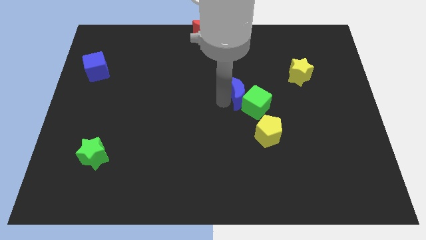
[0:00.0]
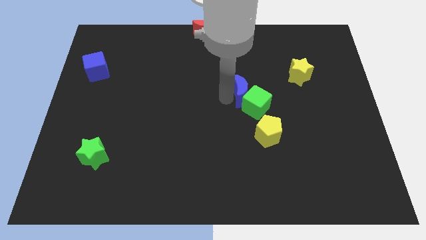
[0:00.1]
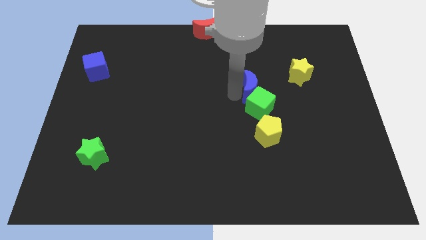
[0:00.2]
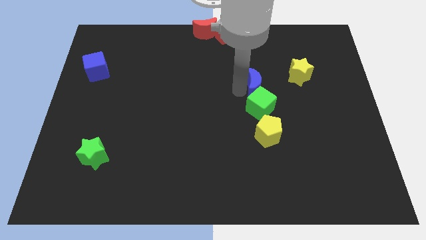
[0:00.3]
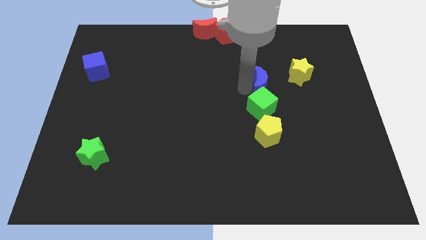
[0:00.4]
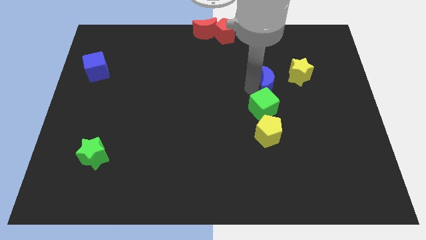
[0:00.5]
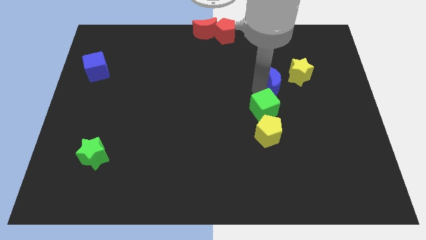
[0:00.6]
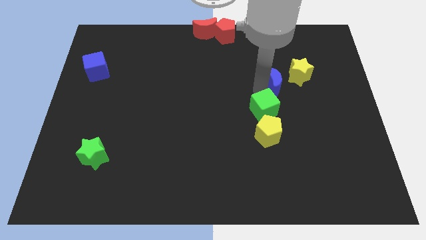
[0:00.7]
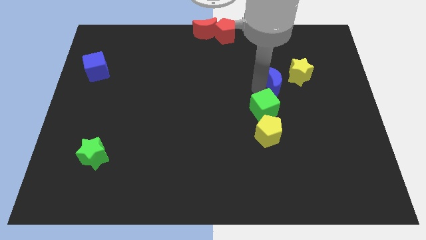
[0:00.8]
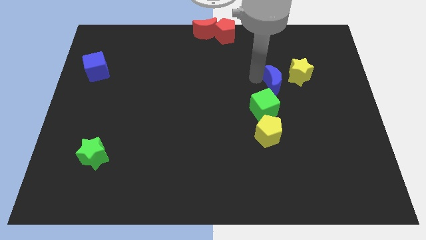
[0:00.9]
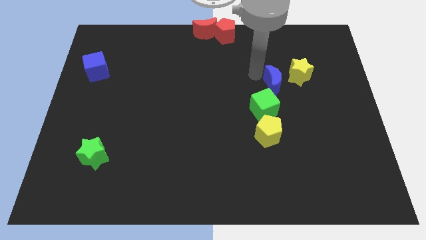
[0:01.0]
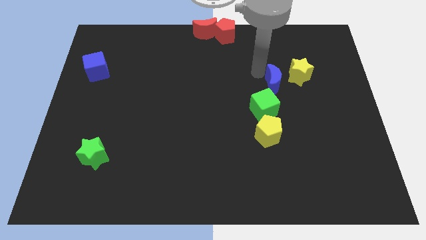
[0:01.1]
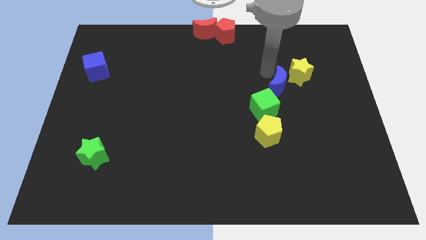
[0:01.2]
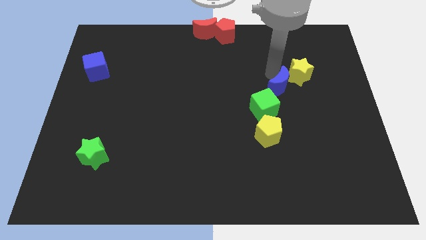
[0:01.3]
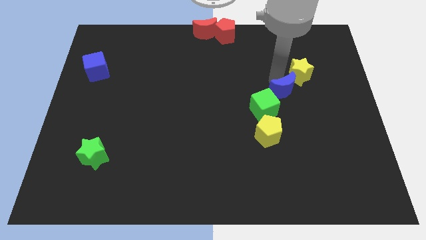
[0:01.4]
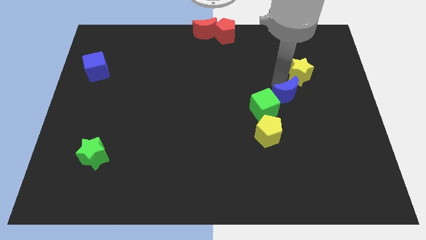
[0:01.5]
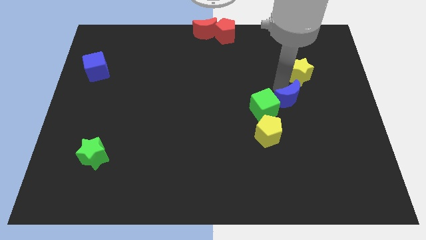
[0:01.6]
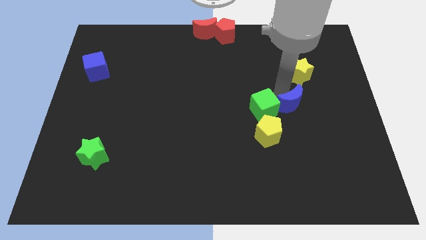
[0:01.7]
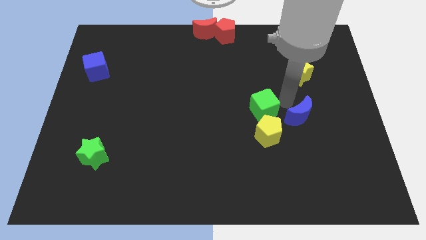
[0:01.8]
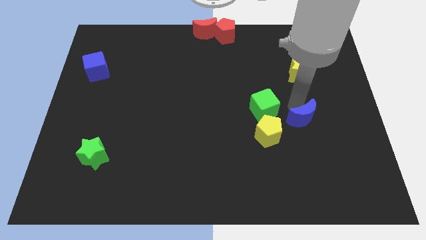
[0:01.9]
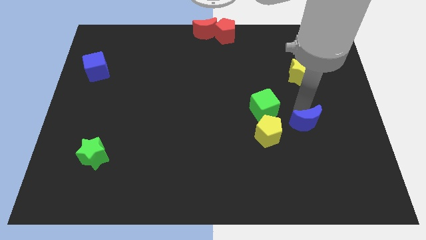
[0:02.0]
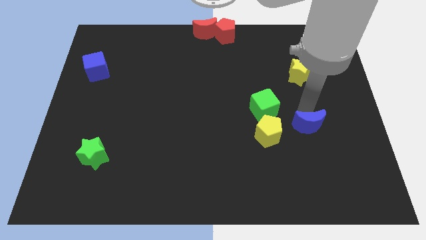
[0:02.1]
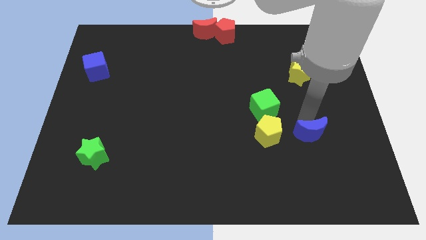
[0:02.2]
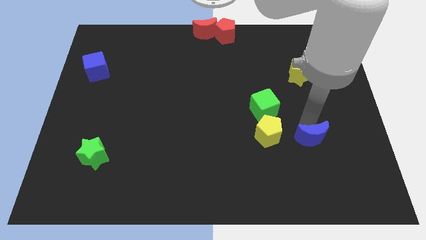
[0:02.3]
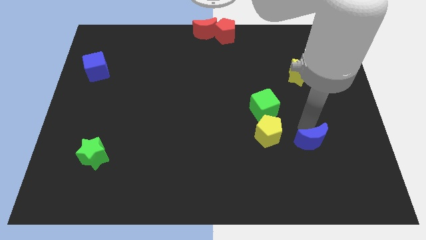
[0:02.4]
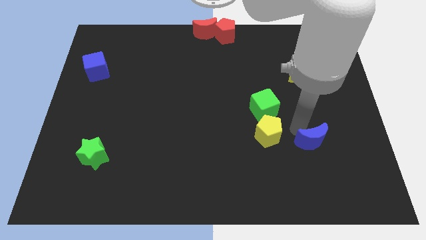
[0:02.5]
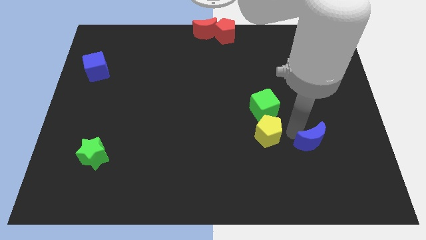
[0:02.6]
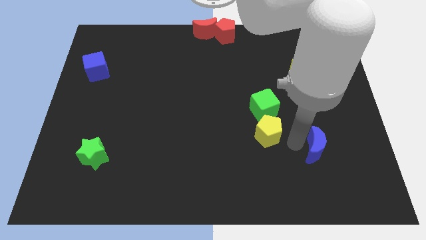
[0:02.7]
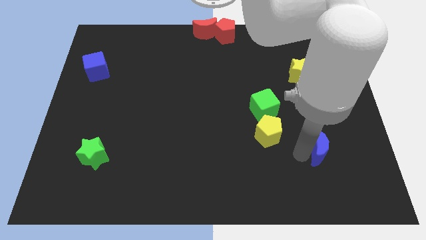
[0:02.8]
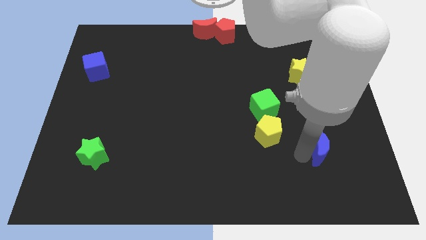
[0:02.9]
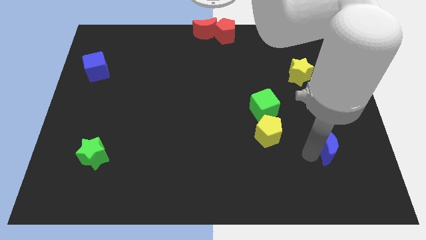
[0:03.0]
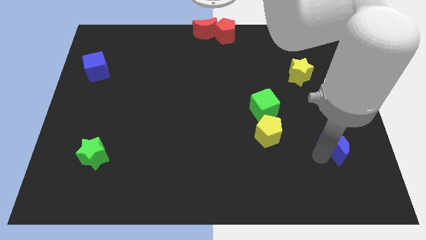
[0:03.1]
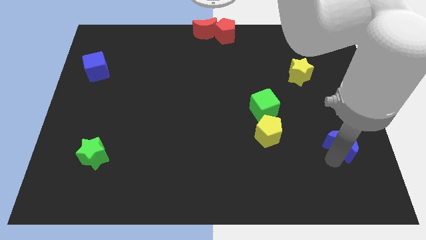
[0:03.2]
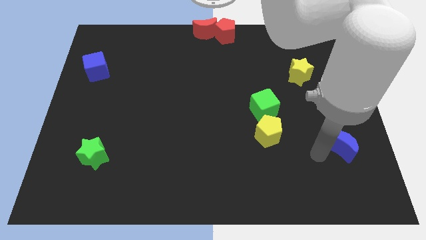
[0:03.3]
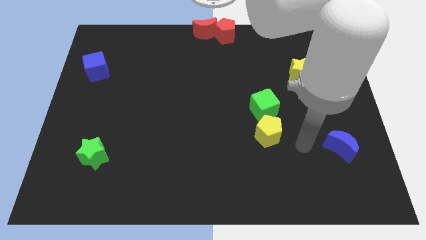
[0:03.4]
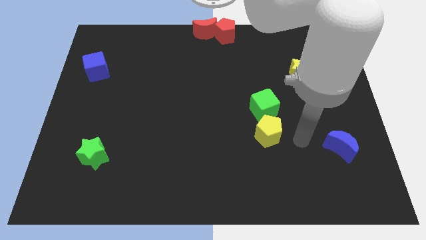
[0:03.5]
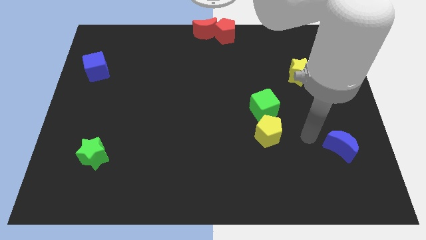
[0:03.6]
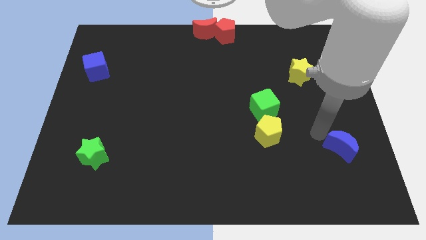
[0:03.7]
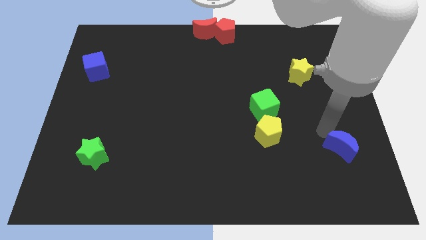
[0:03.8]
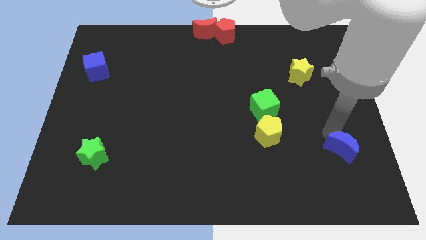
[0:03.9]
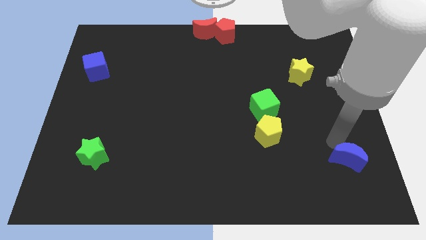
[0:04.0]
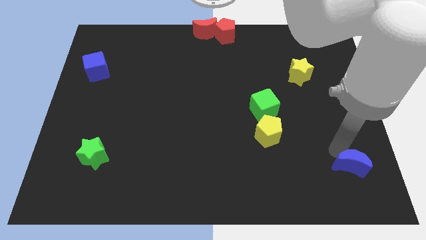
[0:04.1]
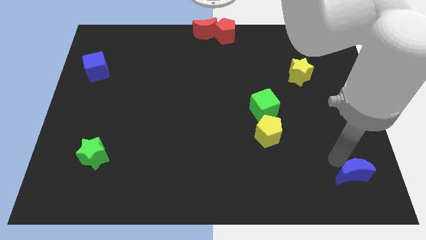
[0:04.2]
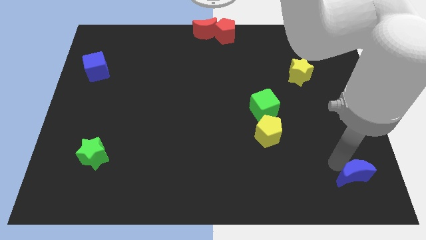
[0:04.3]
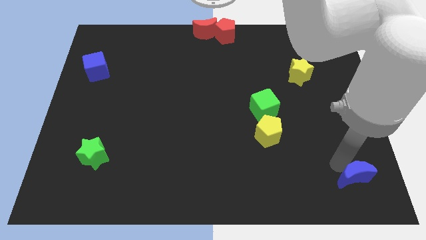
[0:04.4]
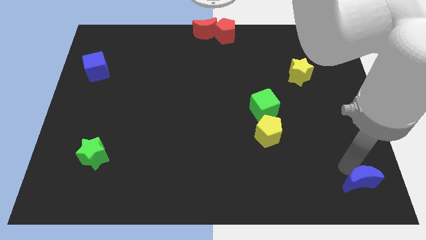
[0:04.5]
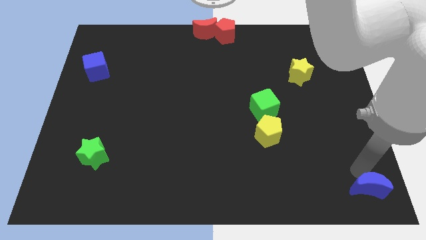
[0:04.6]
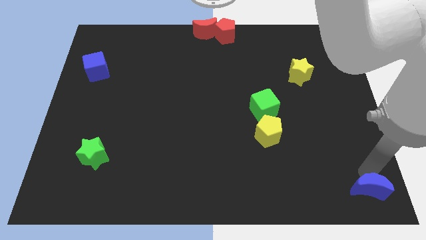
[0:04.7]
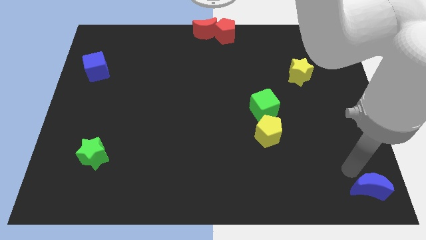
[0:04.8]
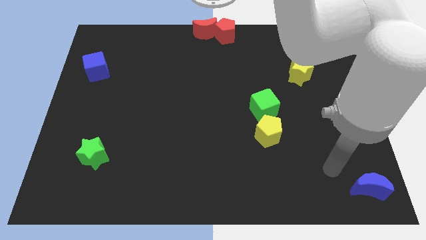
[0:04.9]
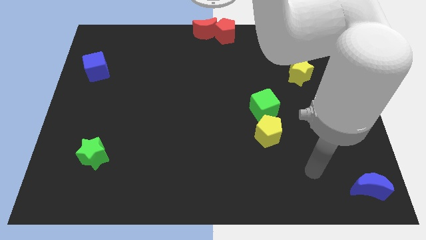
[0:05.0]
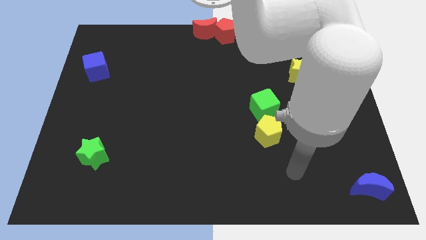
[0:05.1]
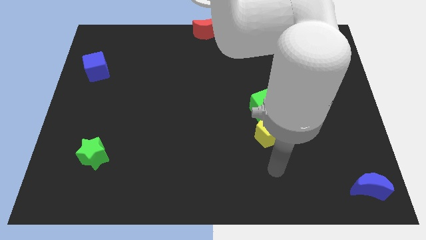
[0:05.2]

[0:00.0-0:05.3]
place the blue moon to the bottom right

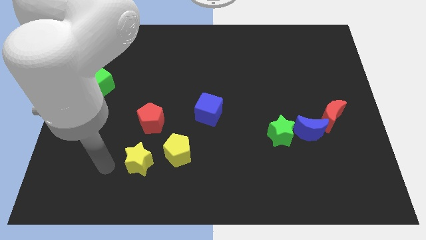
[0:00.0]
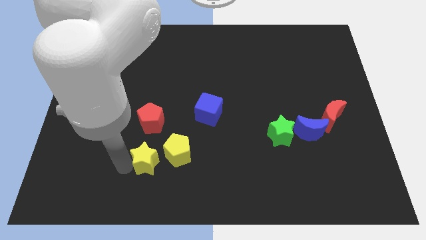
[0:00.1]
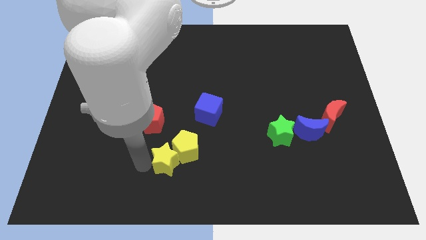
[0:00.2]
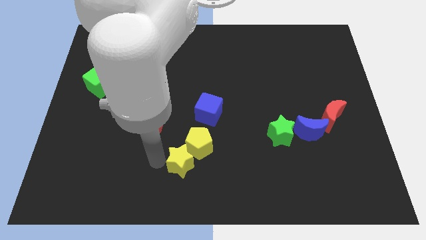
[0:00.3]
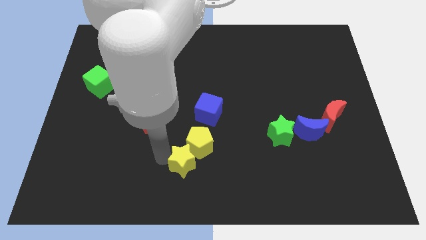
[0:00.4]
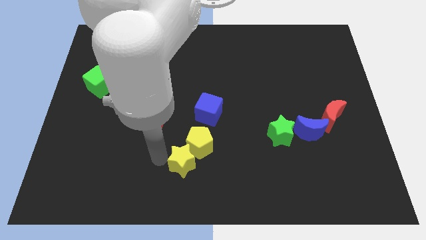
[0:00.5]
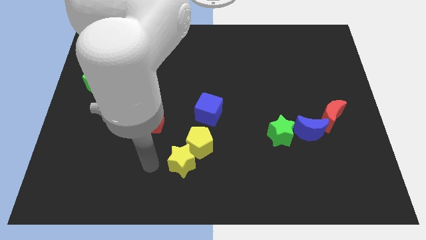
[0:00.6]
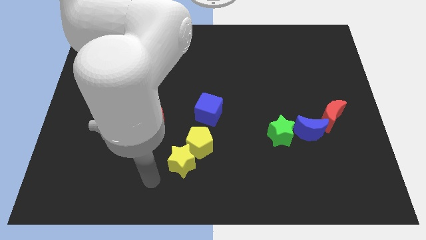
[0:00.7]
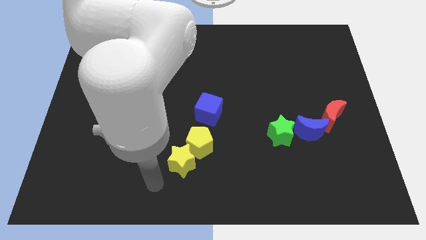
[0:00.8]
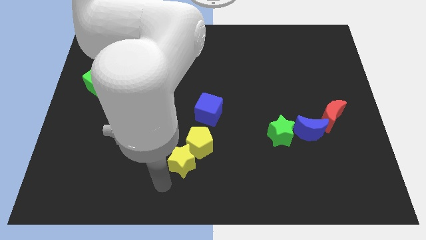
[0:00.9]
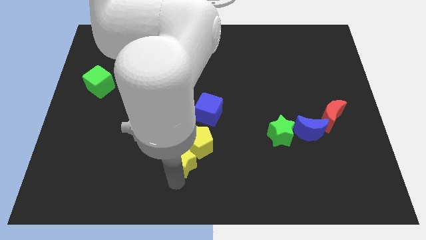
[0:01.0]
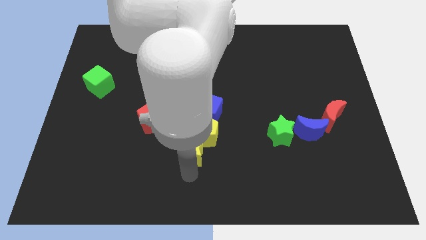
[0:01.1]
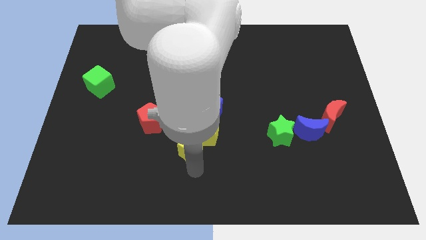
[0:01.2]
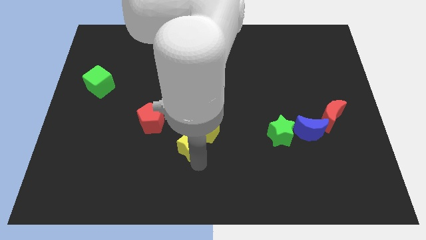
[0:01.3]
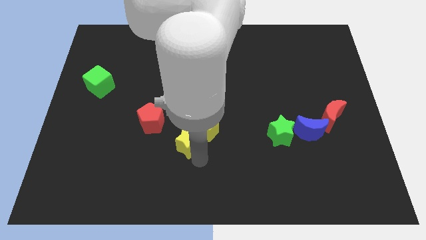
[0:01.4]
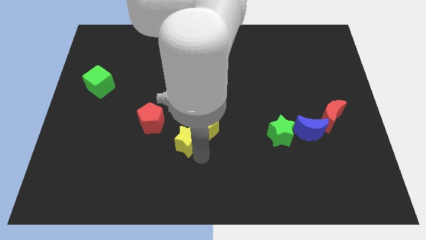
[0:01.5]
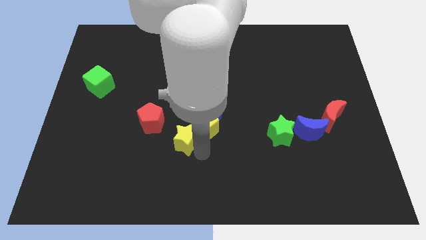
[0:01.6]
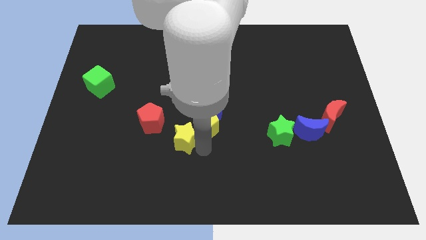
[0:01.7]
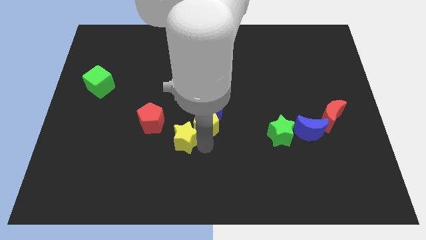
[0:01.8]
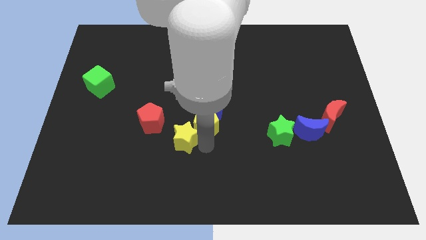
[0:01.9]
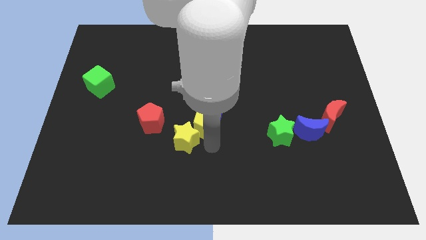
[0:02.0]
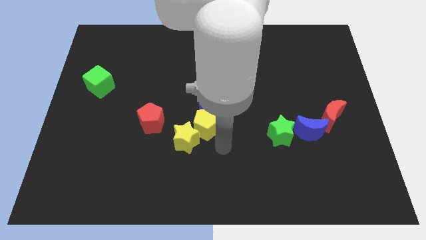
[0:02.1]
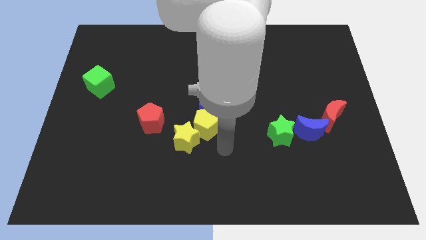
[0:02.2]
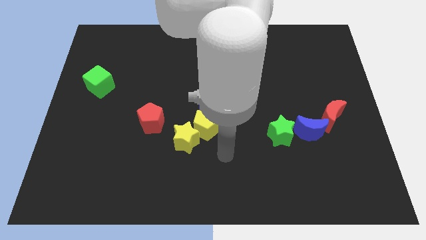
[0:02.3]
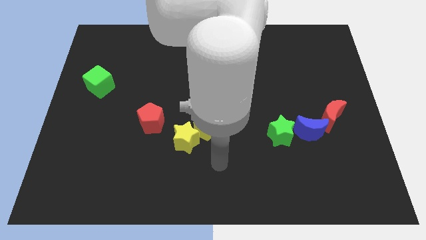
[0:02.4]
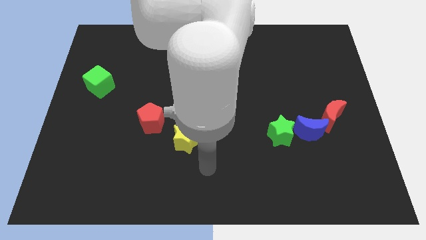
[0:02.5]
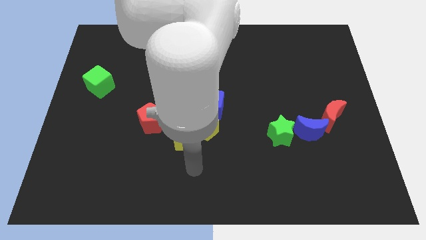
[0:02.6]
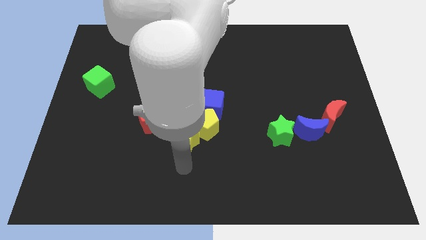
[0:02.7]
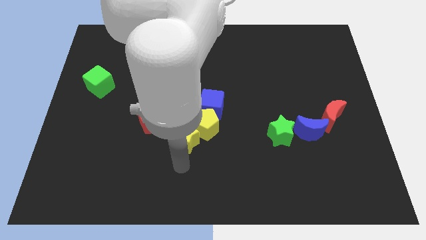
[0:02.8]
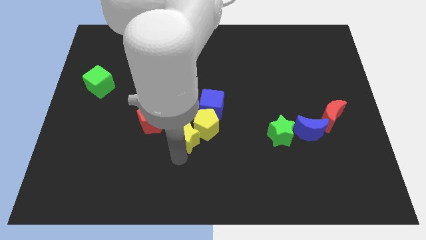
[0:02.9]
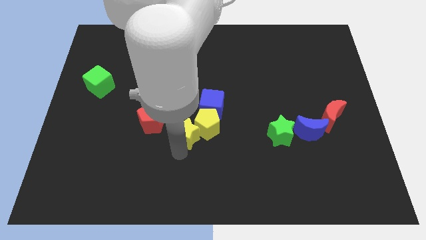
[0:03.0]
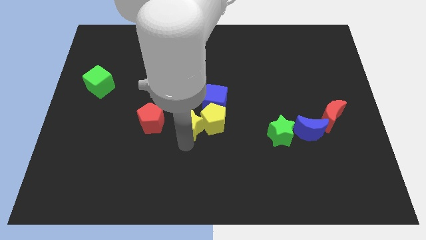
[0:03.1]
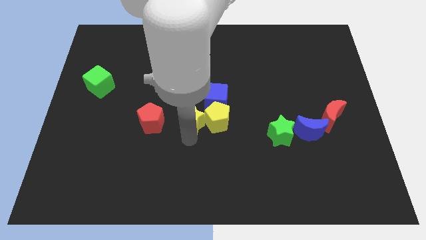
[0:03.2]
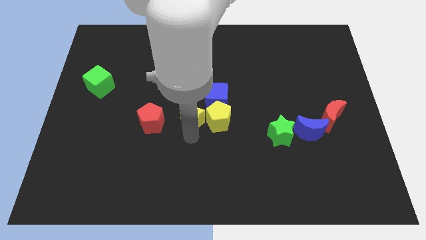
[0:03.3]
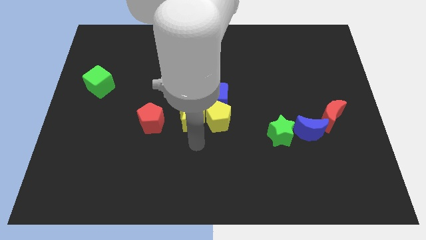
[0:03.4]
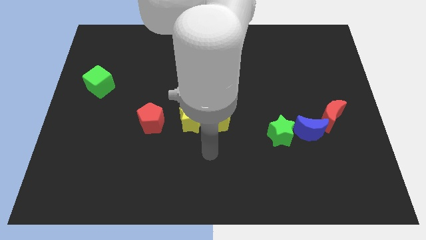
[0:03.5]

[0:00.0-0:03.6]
place the yellow blocks and blue cube at the center of the table
